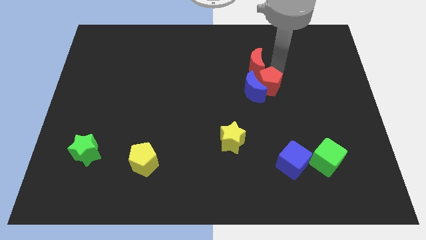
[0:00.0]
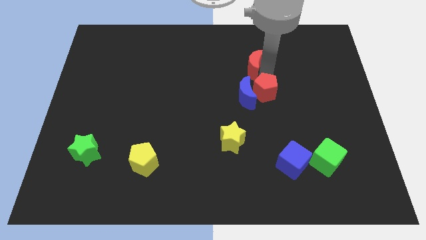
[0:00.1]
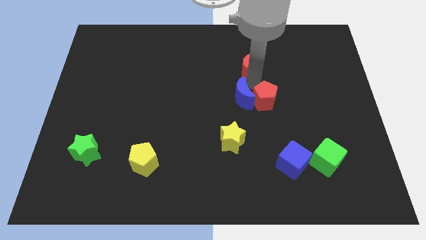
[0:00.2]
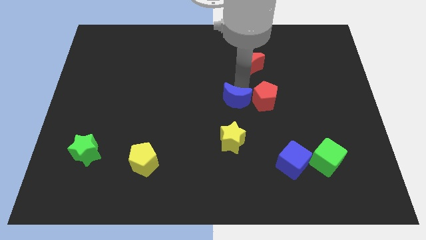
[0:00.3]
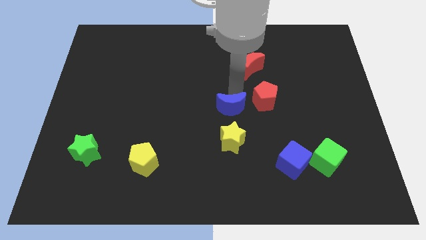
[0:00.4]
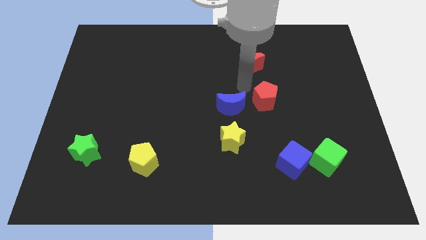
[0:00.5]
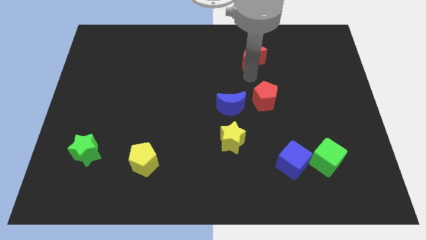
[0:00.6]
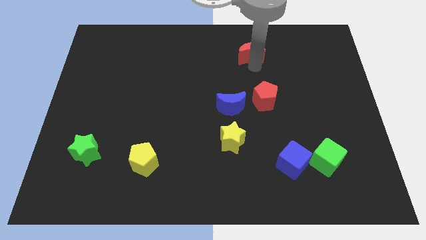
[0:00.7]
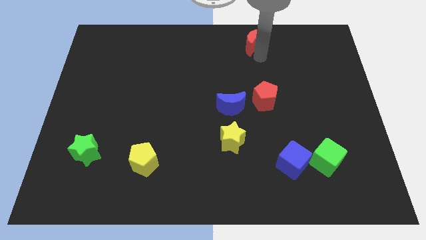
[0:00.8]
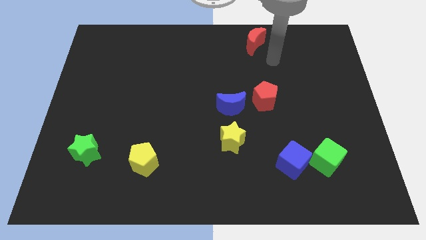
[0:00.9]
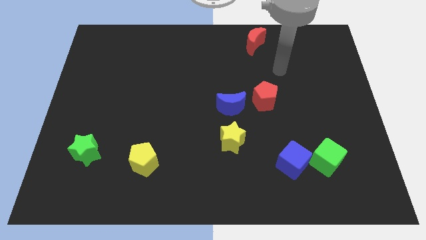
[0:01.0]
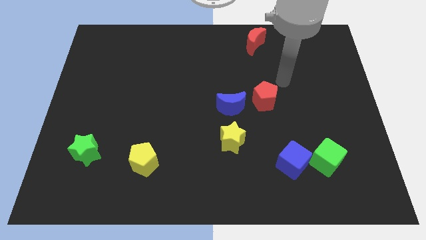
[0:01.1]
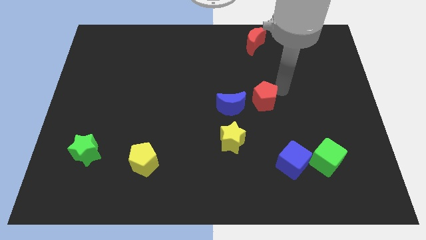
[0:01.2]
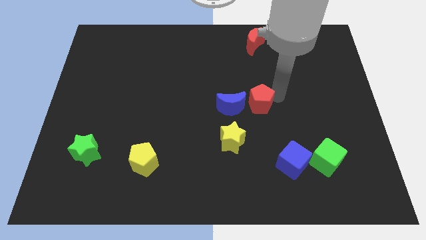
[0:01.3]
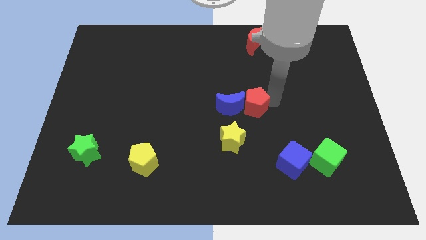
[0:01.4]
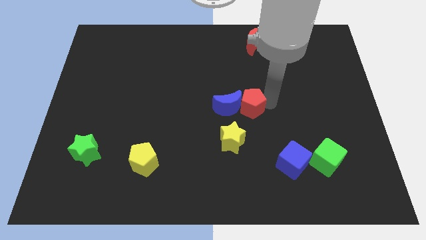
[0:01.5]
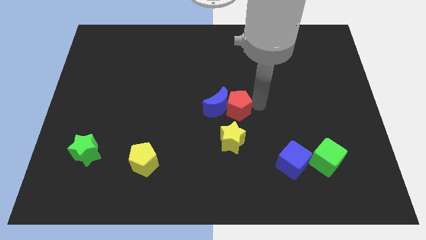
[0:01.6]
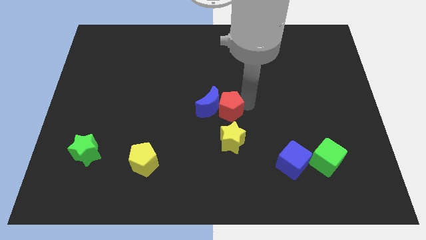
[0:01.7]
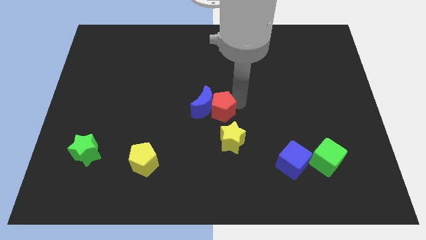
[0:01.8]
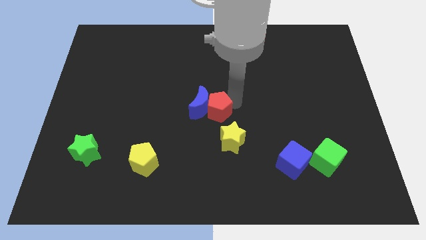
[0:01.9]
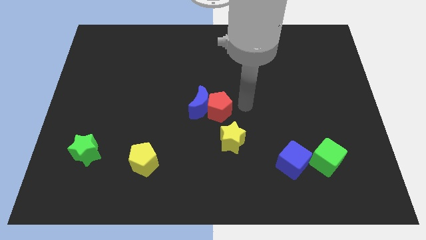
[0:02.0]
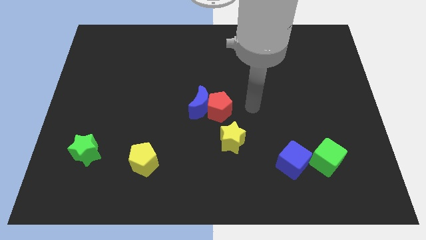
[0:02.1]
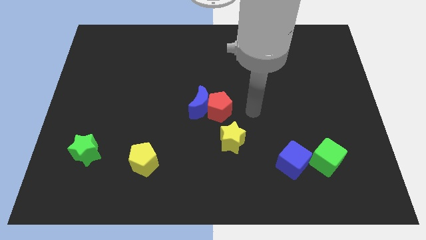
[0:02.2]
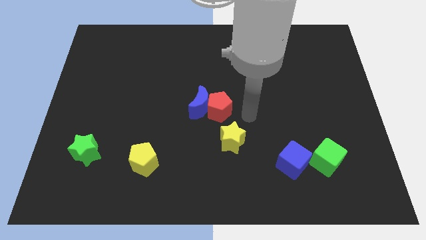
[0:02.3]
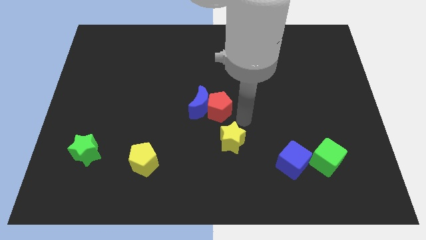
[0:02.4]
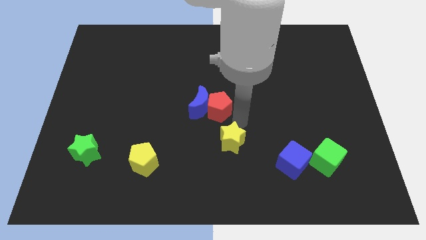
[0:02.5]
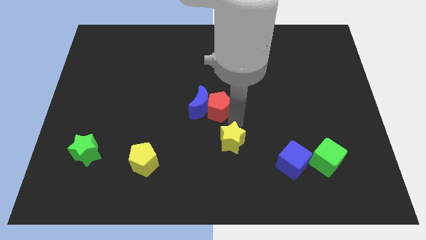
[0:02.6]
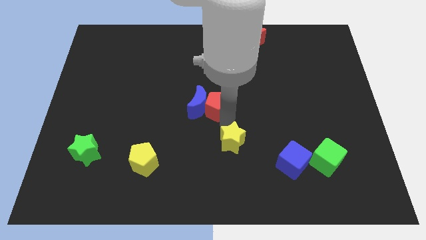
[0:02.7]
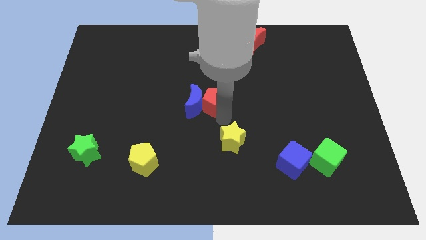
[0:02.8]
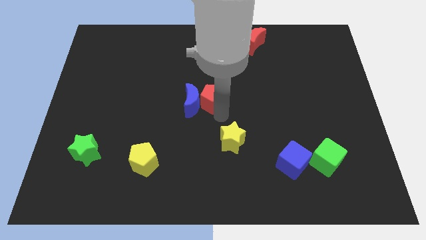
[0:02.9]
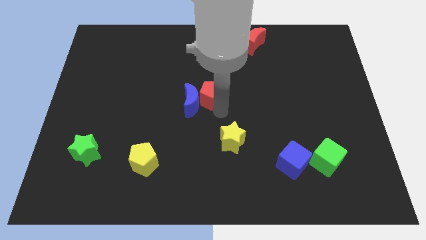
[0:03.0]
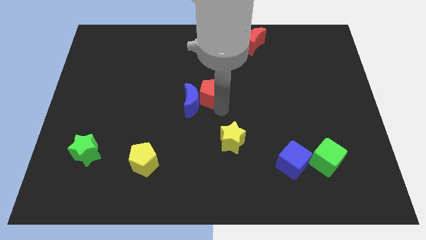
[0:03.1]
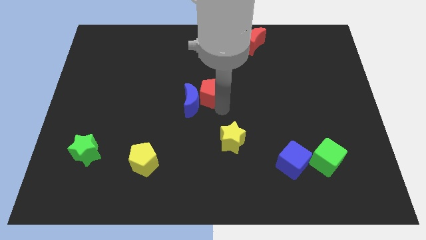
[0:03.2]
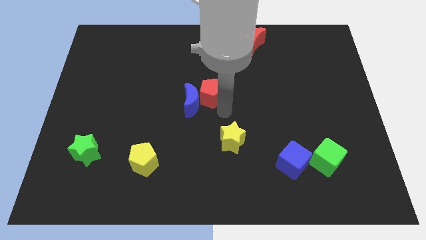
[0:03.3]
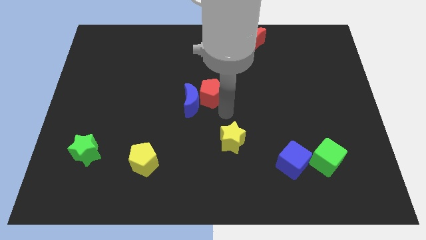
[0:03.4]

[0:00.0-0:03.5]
push the blue crescent with the red pentagon towards the center of the board

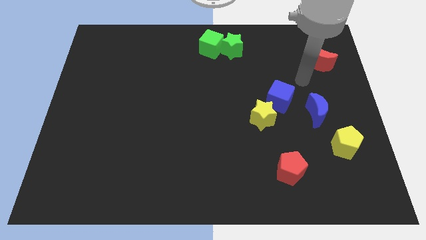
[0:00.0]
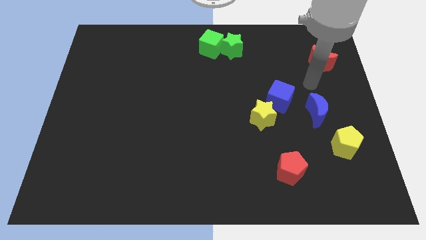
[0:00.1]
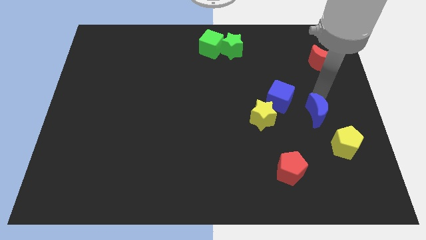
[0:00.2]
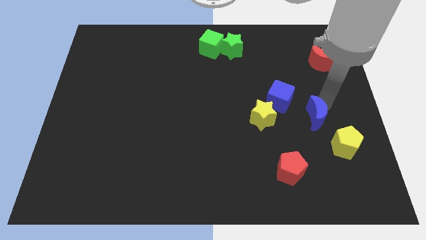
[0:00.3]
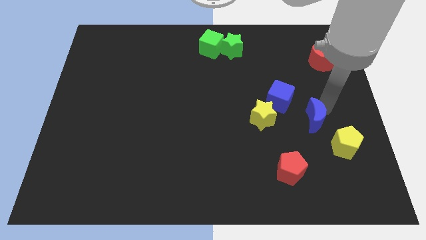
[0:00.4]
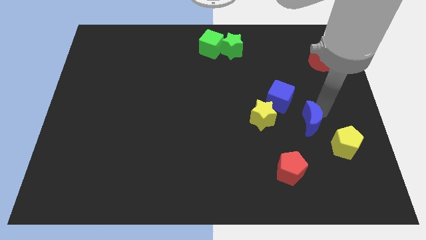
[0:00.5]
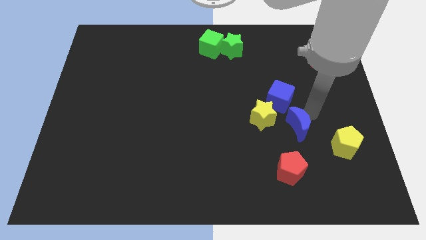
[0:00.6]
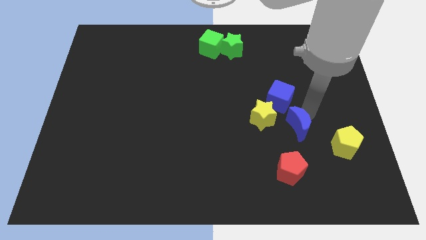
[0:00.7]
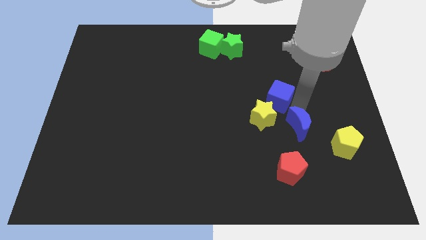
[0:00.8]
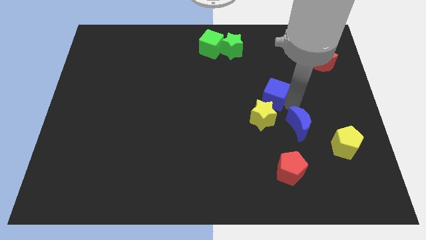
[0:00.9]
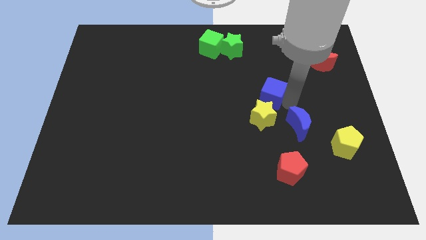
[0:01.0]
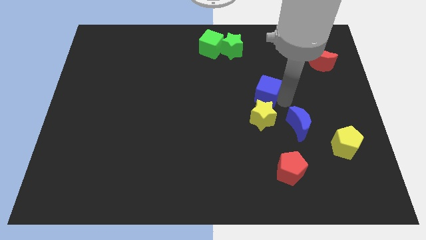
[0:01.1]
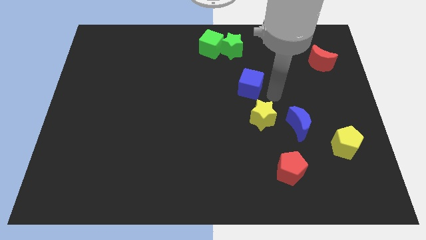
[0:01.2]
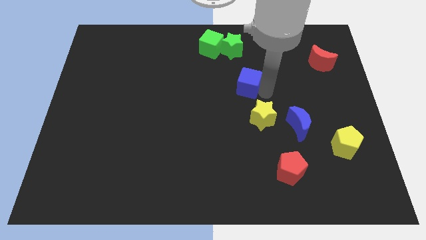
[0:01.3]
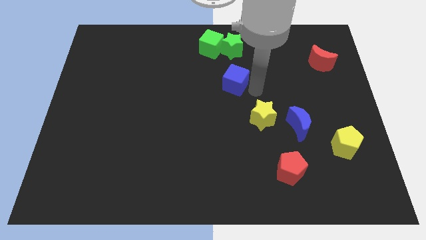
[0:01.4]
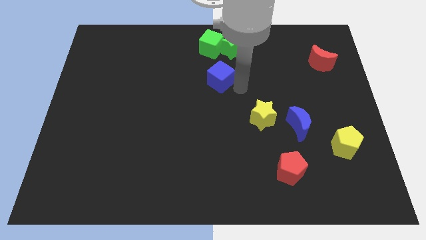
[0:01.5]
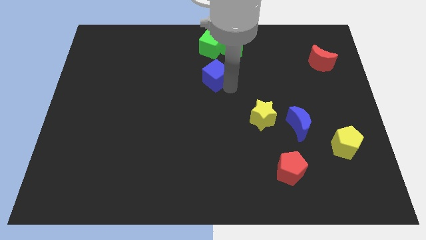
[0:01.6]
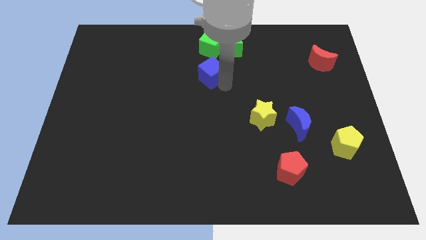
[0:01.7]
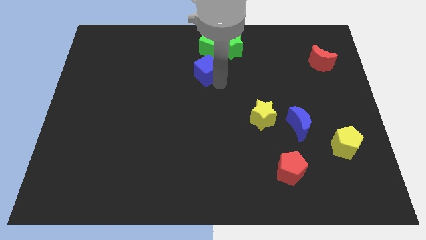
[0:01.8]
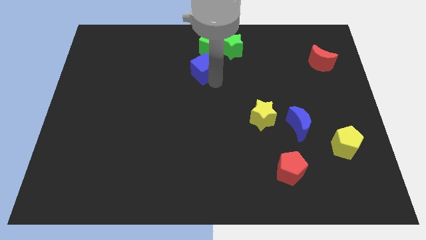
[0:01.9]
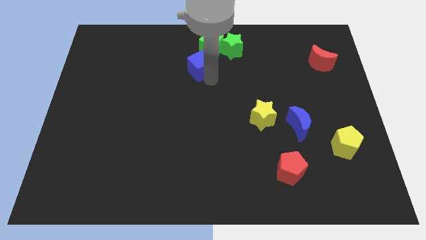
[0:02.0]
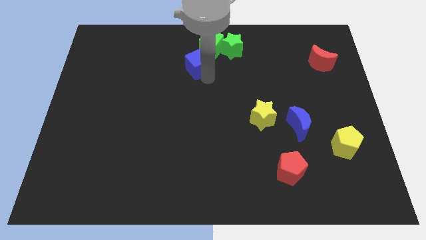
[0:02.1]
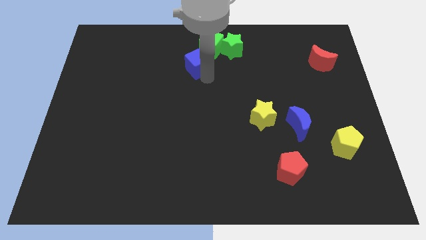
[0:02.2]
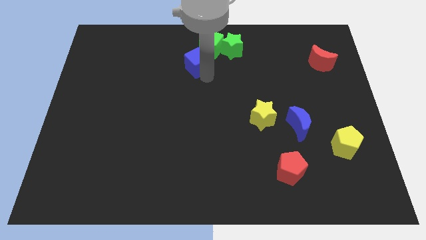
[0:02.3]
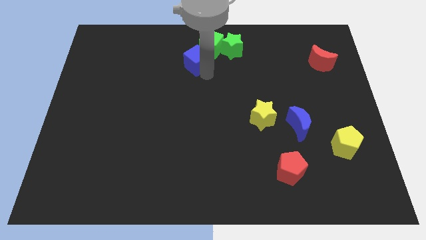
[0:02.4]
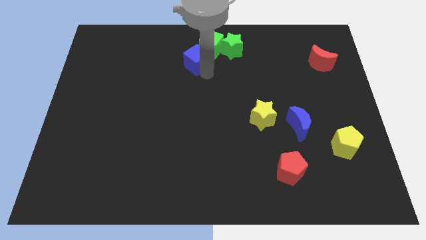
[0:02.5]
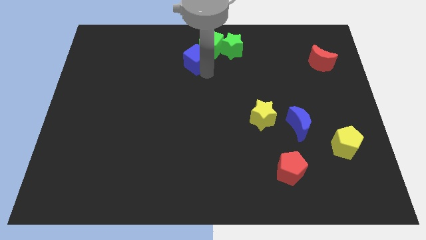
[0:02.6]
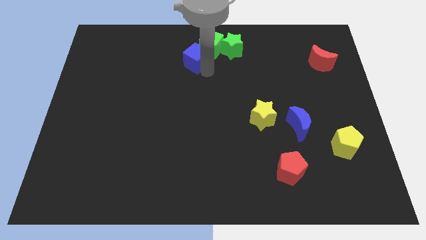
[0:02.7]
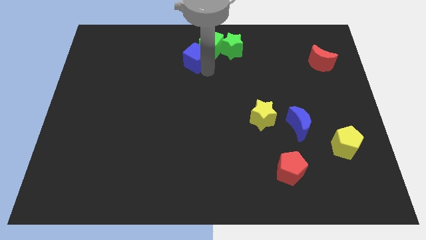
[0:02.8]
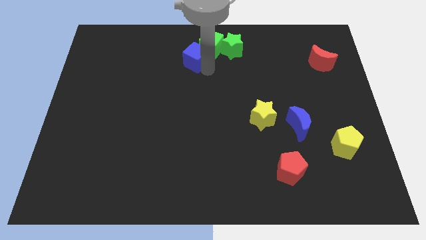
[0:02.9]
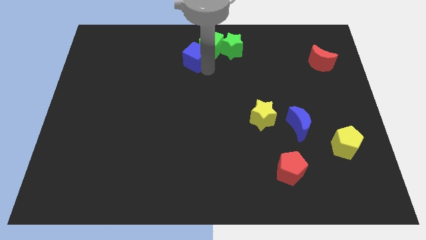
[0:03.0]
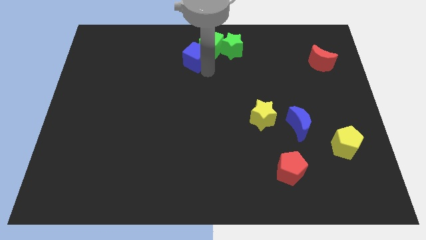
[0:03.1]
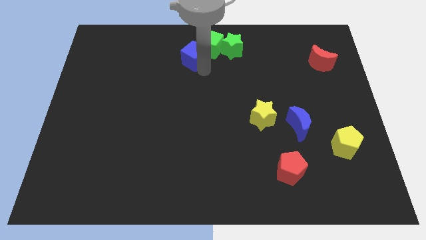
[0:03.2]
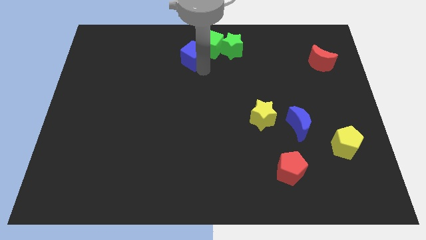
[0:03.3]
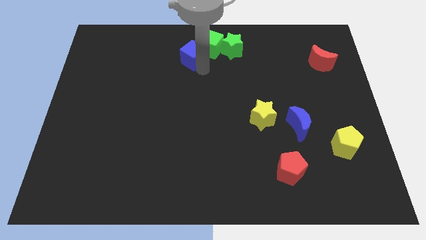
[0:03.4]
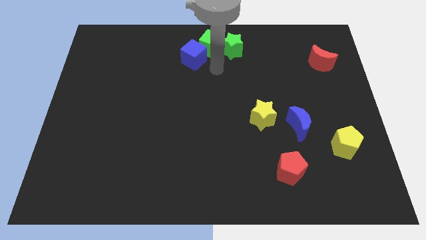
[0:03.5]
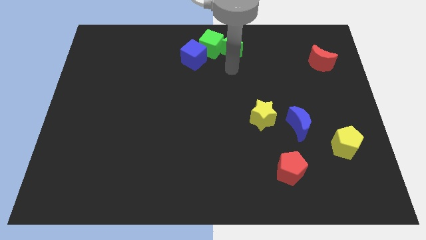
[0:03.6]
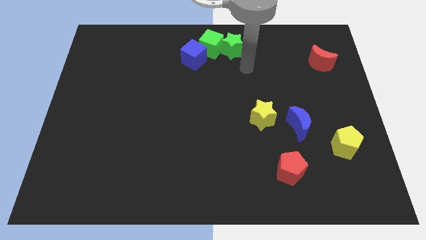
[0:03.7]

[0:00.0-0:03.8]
separate blue cube from yellow star

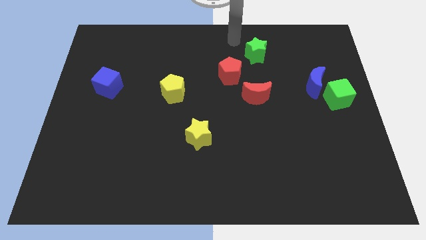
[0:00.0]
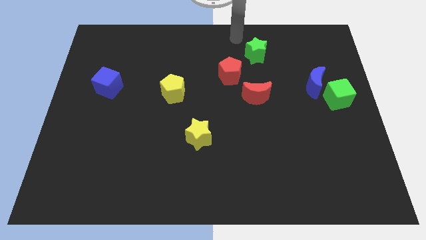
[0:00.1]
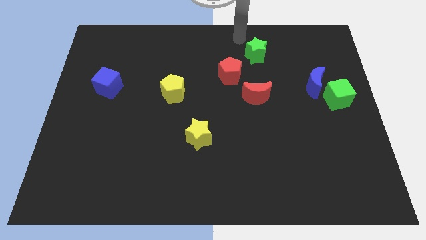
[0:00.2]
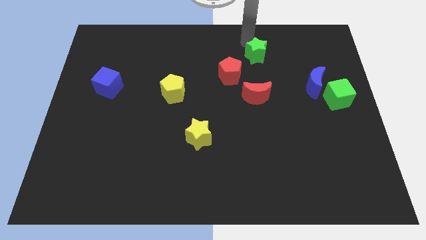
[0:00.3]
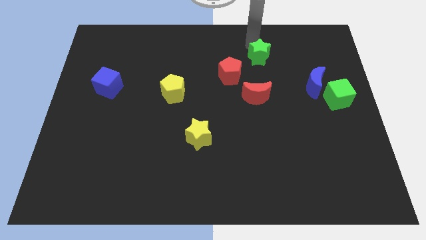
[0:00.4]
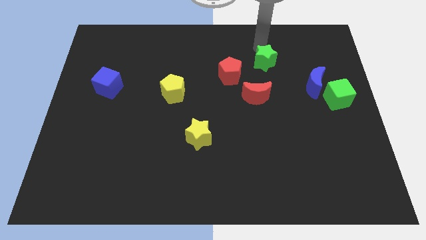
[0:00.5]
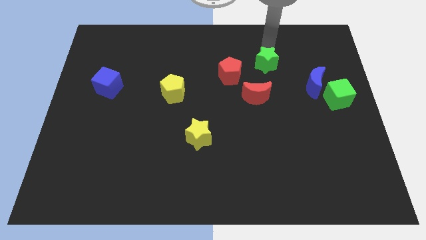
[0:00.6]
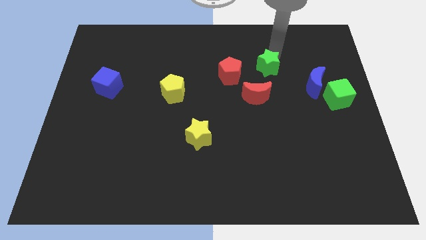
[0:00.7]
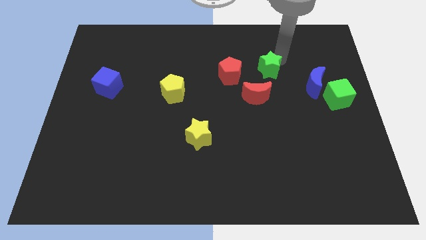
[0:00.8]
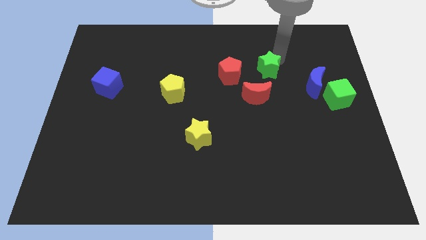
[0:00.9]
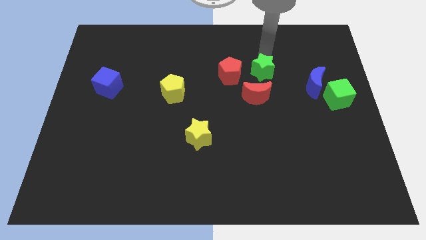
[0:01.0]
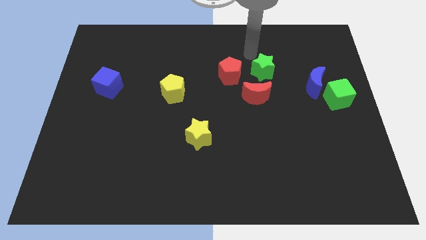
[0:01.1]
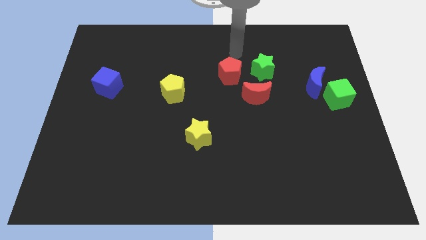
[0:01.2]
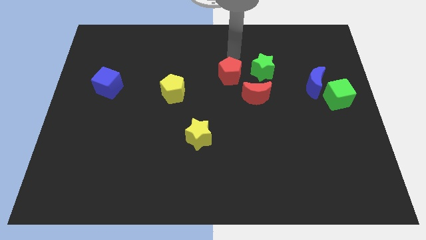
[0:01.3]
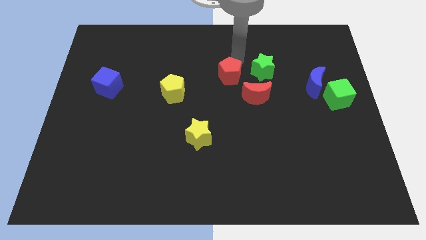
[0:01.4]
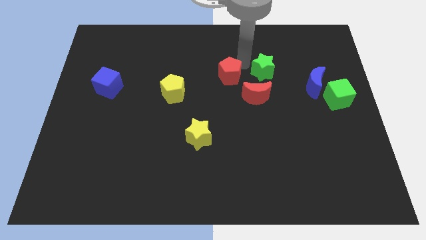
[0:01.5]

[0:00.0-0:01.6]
move the green star to the right of the red pentagon
